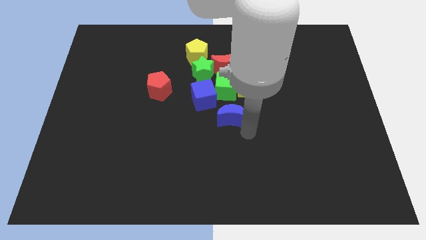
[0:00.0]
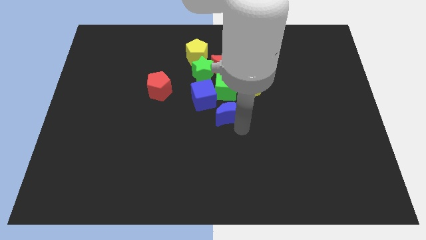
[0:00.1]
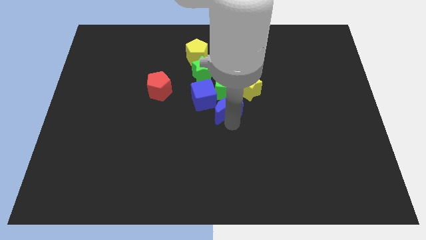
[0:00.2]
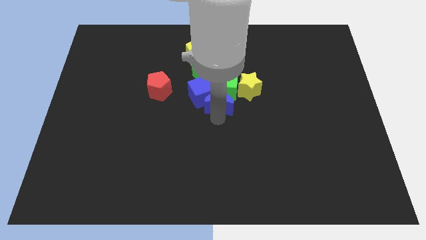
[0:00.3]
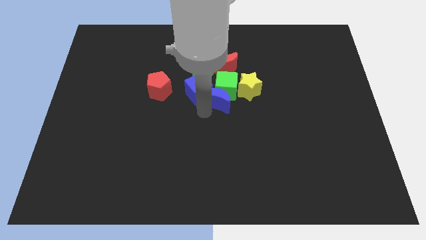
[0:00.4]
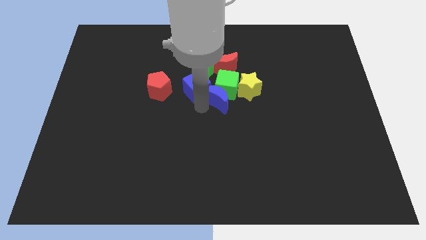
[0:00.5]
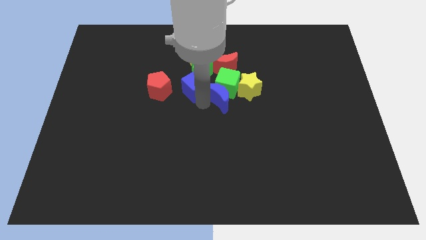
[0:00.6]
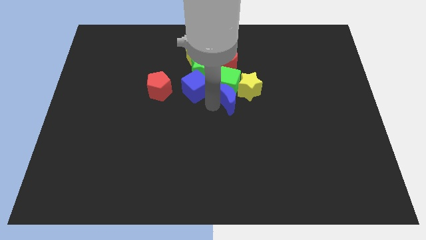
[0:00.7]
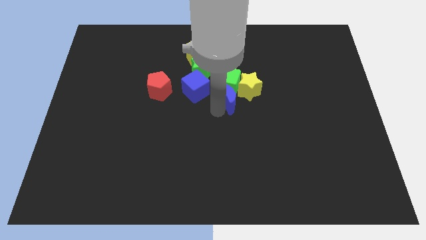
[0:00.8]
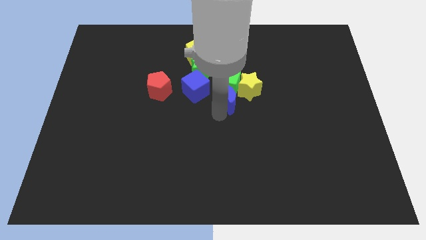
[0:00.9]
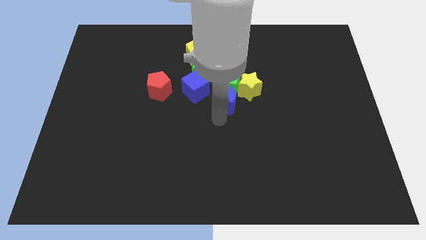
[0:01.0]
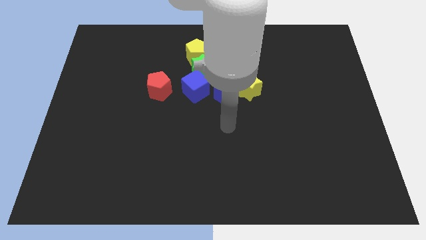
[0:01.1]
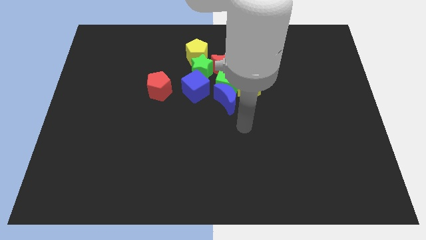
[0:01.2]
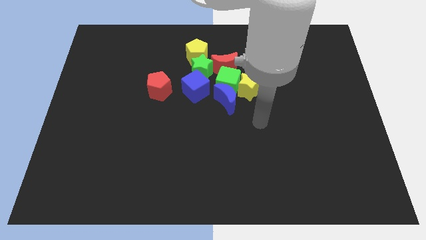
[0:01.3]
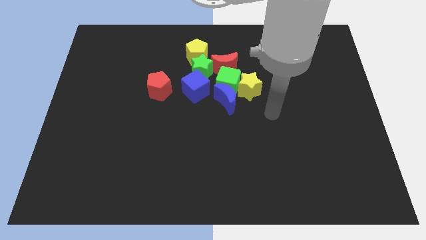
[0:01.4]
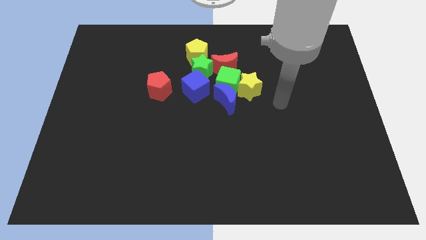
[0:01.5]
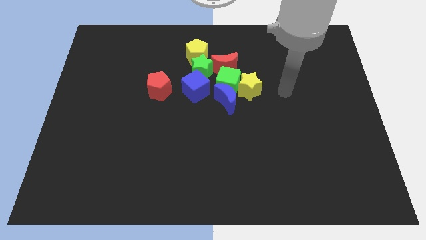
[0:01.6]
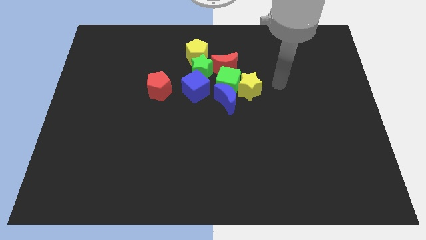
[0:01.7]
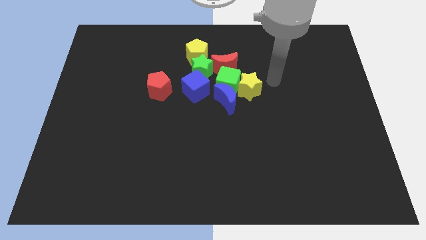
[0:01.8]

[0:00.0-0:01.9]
push the blue moon into the green cube

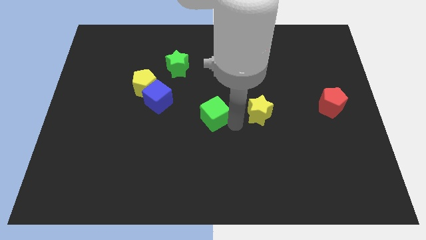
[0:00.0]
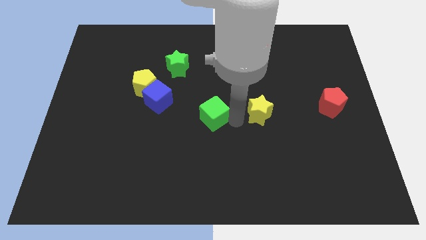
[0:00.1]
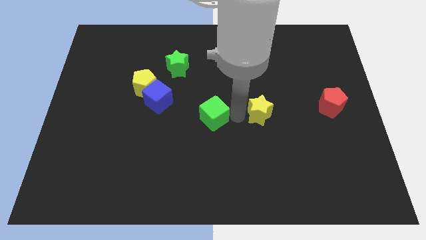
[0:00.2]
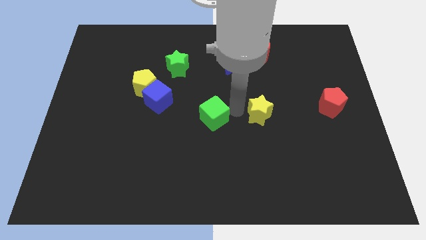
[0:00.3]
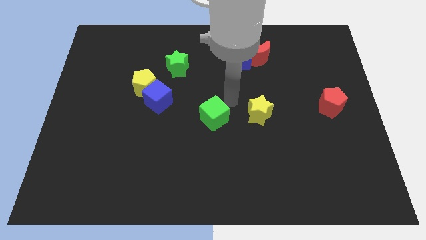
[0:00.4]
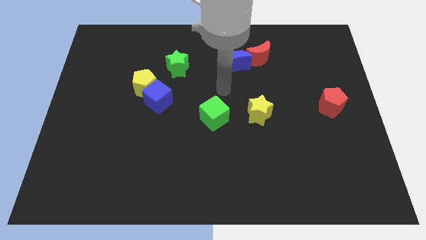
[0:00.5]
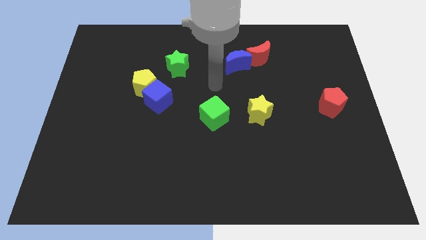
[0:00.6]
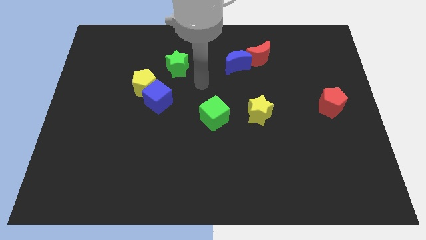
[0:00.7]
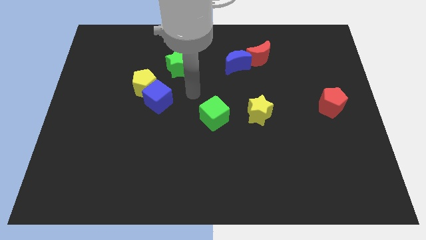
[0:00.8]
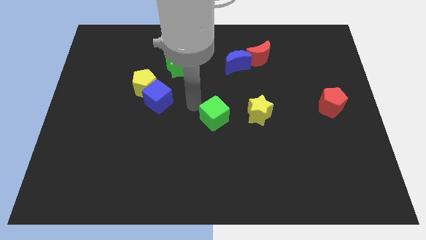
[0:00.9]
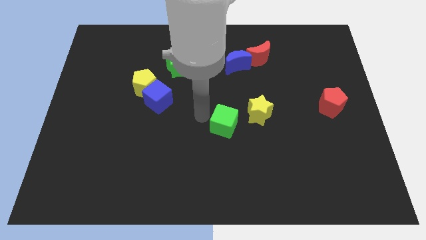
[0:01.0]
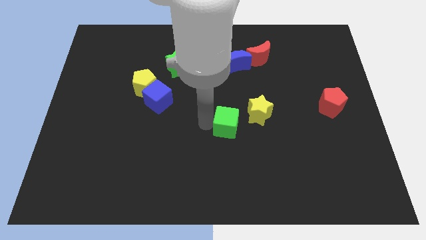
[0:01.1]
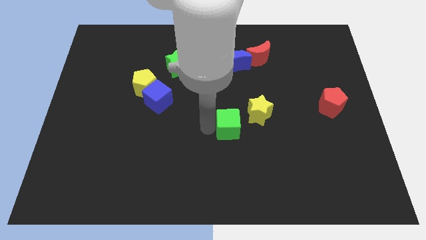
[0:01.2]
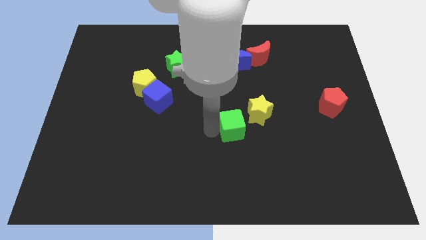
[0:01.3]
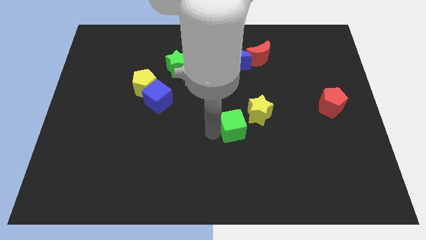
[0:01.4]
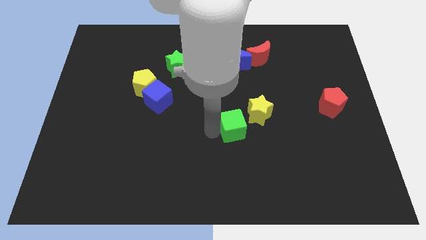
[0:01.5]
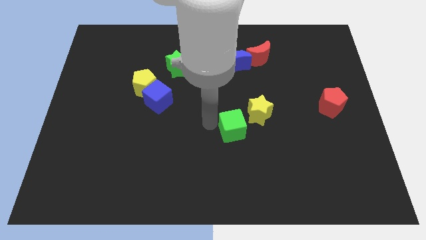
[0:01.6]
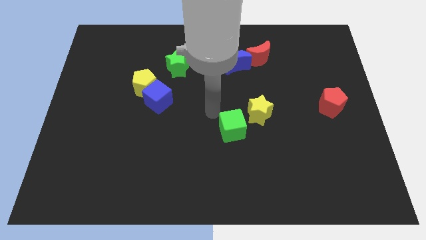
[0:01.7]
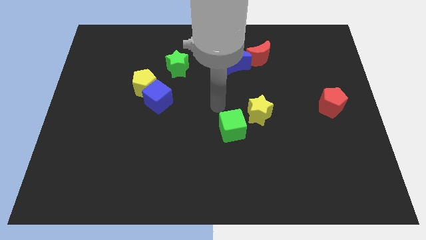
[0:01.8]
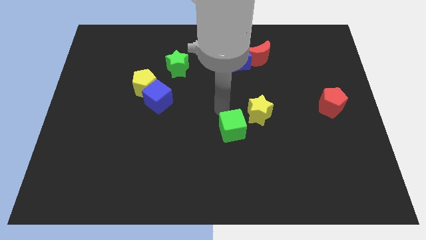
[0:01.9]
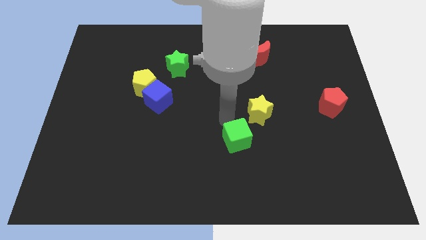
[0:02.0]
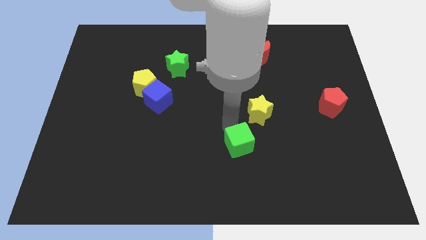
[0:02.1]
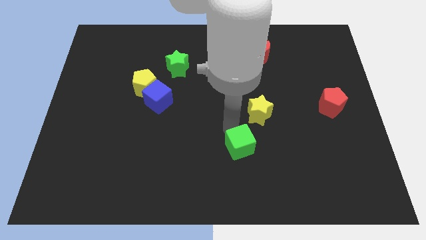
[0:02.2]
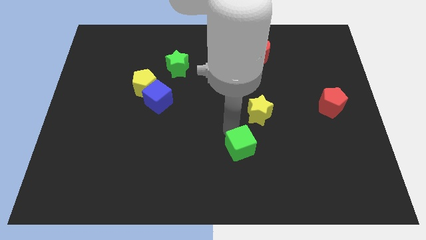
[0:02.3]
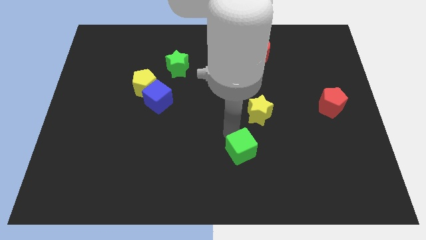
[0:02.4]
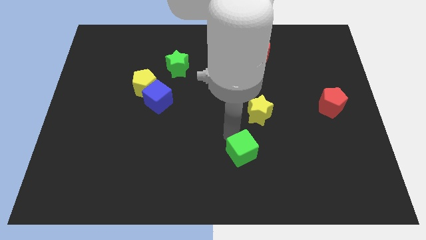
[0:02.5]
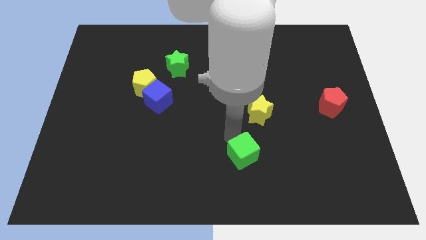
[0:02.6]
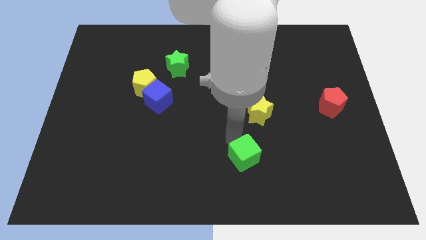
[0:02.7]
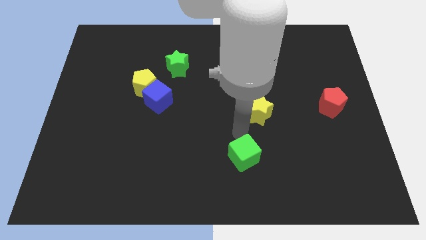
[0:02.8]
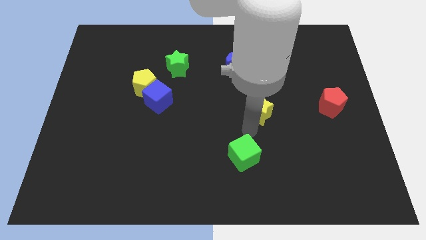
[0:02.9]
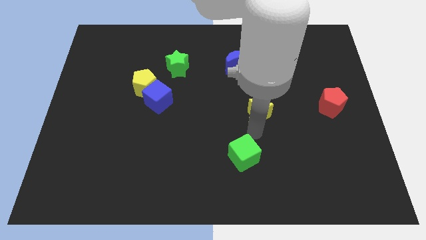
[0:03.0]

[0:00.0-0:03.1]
slide green cube towards down

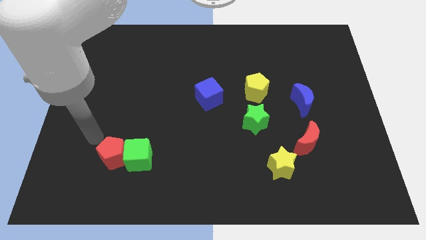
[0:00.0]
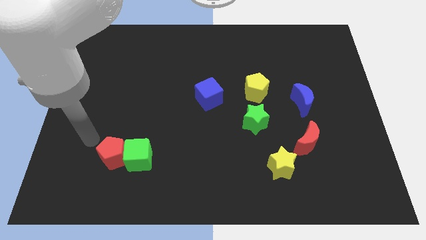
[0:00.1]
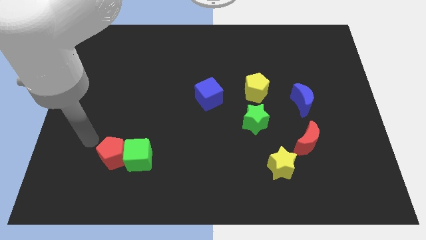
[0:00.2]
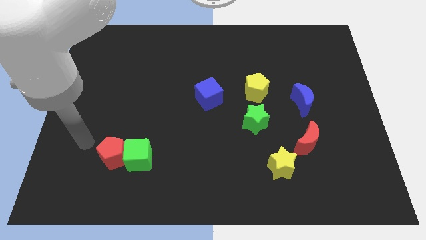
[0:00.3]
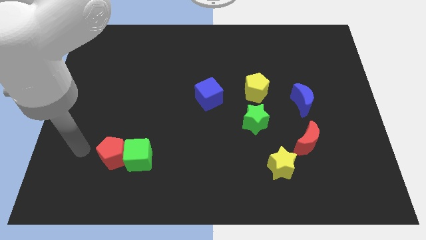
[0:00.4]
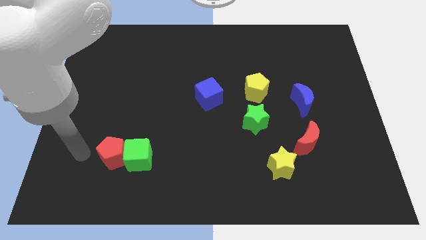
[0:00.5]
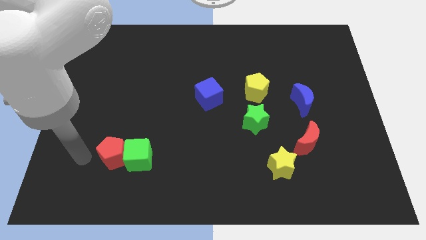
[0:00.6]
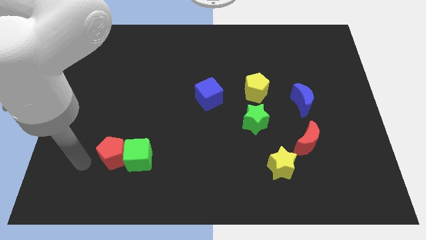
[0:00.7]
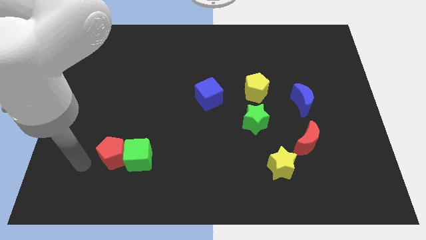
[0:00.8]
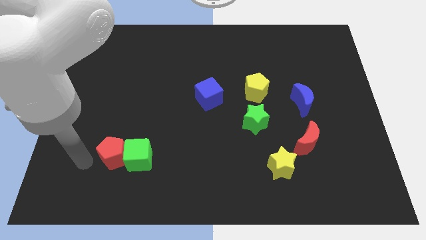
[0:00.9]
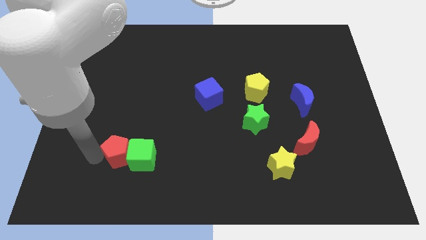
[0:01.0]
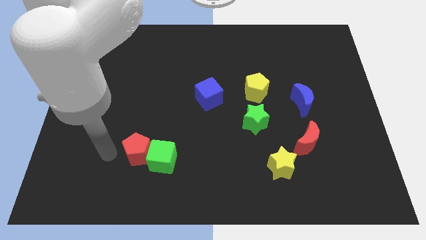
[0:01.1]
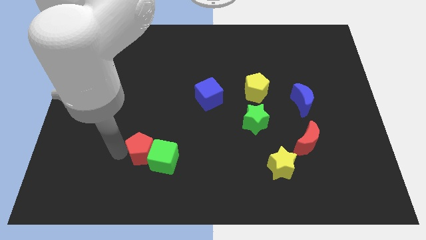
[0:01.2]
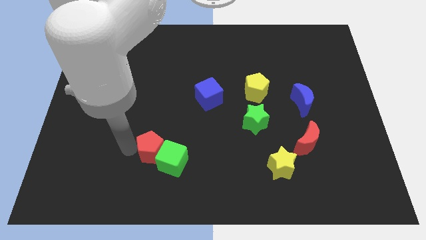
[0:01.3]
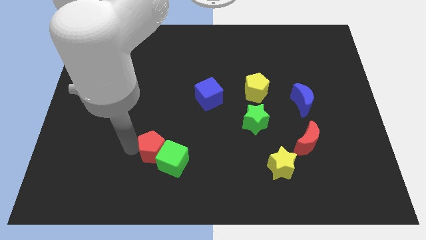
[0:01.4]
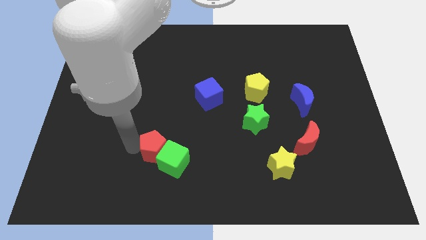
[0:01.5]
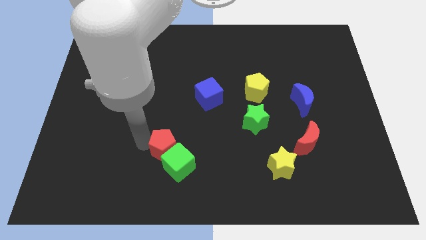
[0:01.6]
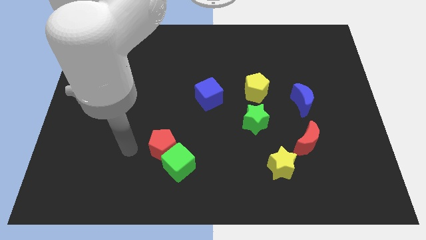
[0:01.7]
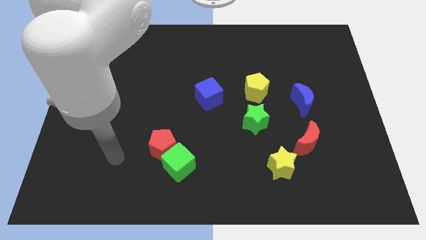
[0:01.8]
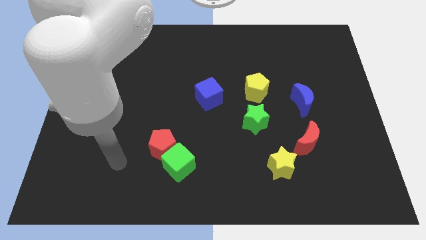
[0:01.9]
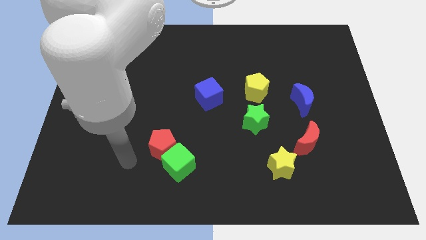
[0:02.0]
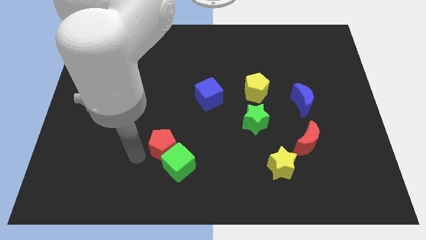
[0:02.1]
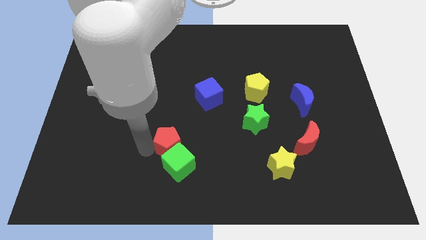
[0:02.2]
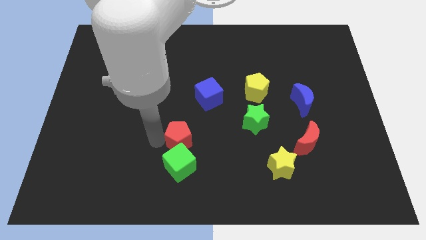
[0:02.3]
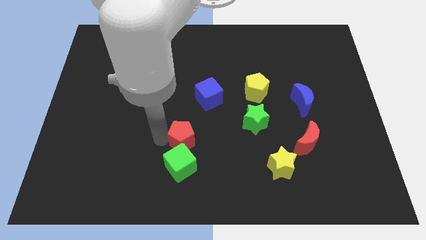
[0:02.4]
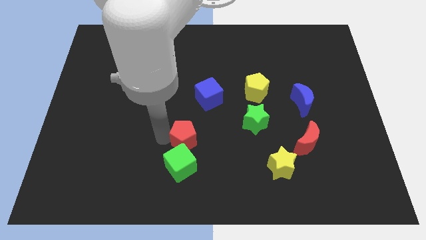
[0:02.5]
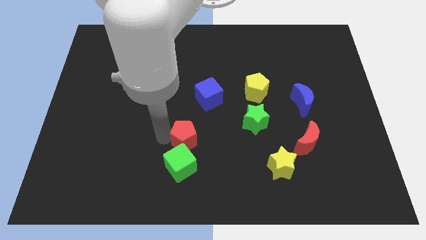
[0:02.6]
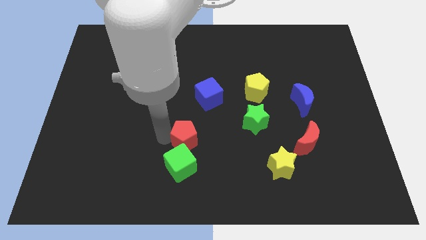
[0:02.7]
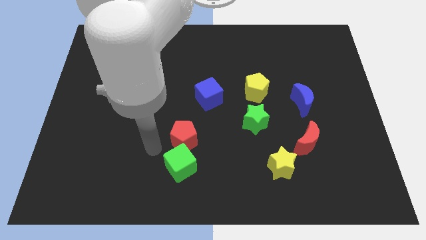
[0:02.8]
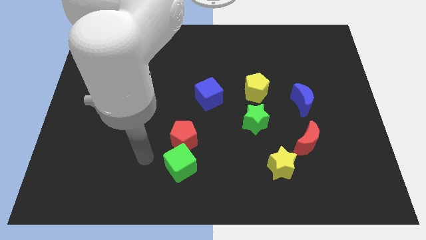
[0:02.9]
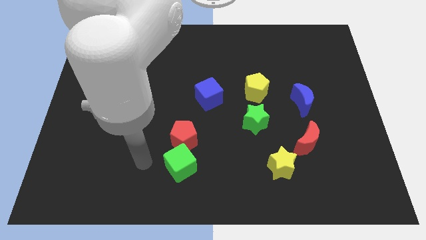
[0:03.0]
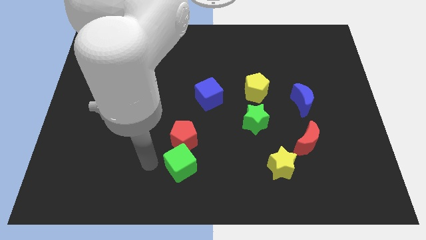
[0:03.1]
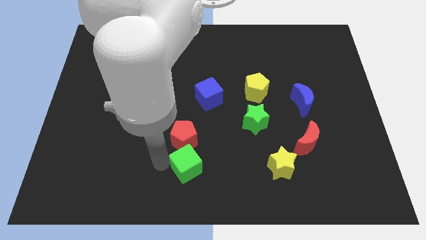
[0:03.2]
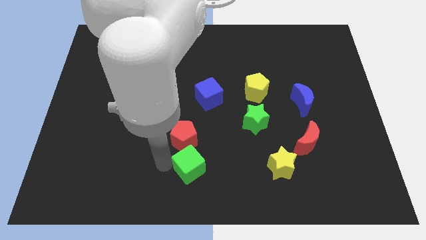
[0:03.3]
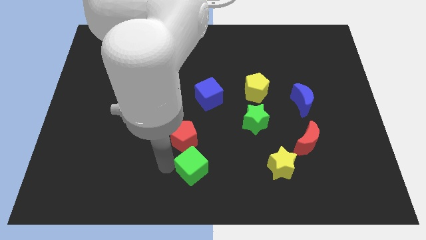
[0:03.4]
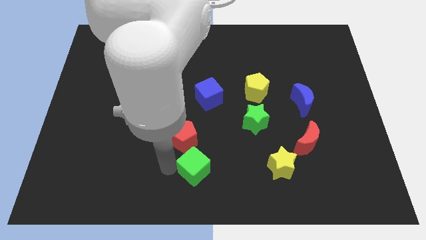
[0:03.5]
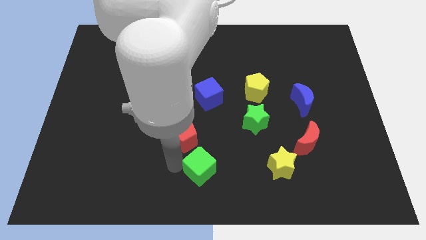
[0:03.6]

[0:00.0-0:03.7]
push the red pentagon and green cube to the bottom center

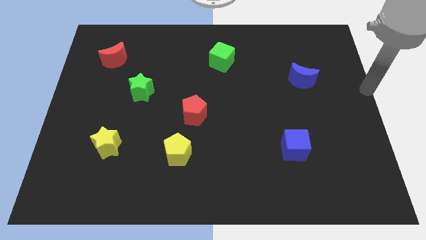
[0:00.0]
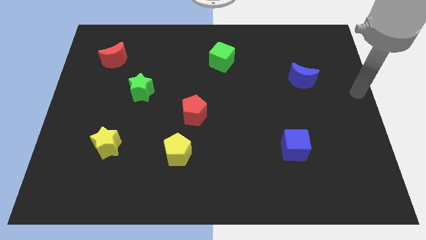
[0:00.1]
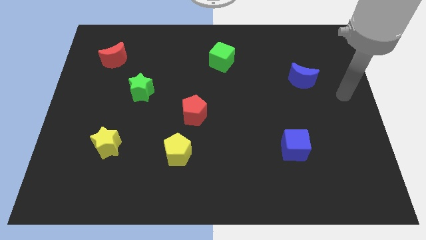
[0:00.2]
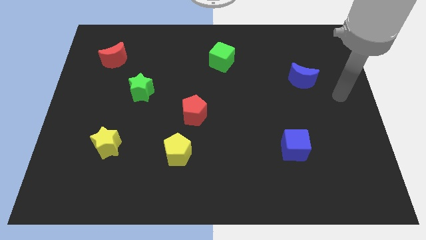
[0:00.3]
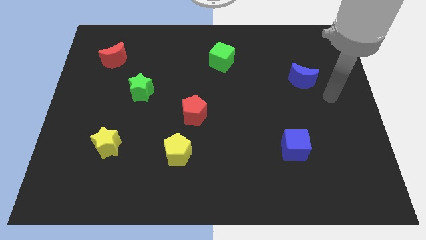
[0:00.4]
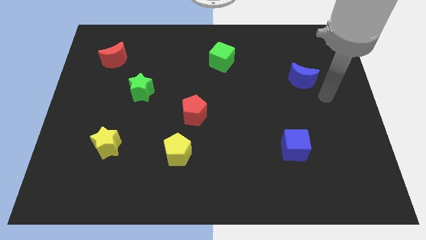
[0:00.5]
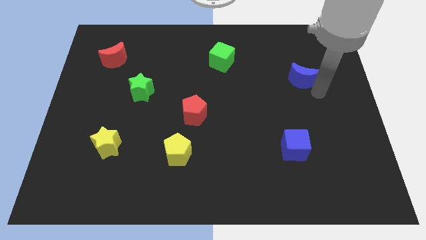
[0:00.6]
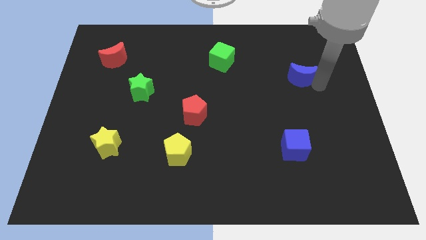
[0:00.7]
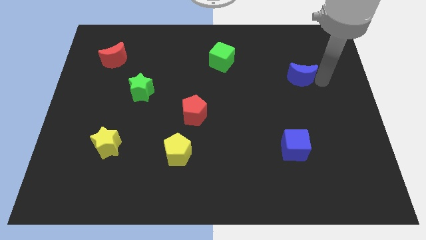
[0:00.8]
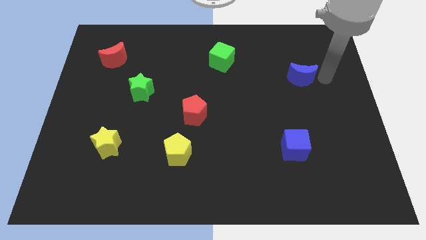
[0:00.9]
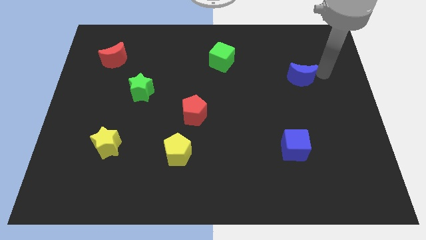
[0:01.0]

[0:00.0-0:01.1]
move your arm towrads the blue crescent
